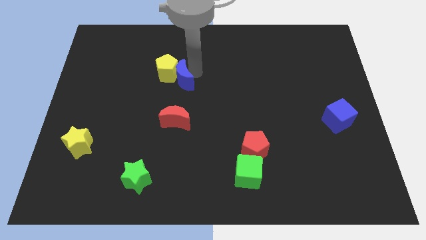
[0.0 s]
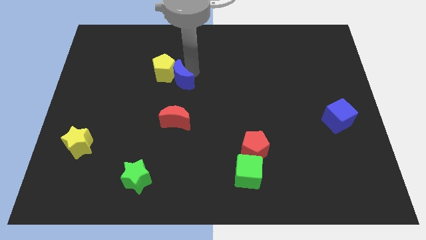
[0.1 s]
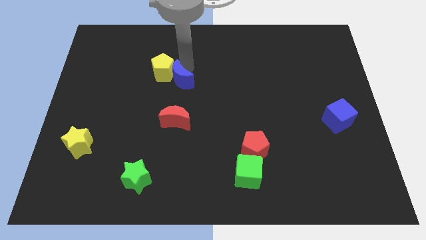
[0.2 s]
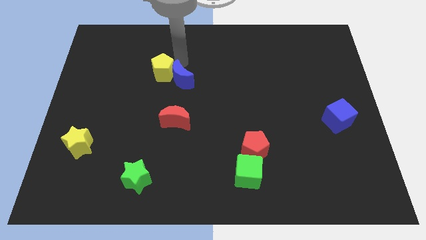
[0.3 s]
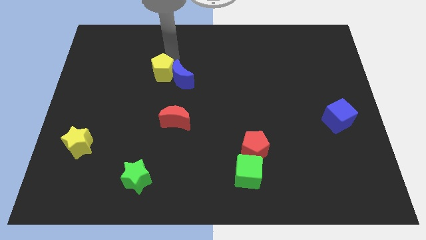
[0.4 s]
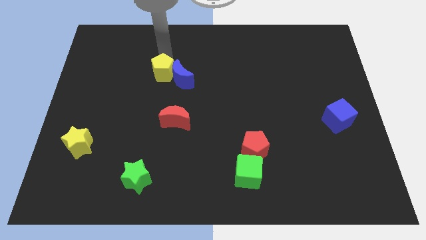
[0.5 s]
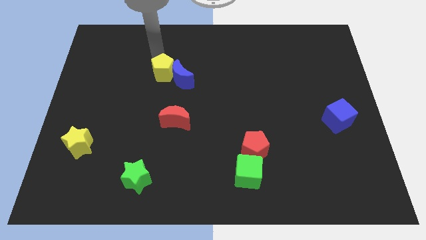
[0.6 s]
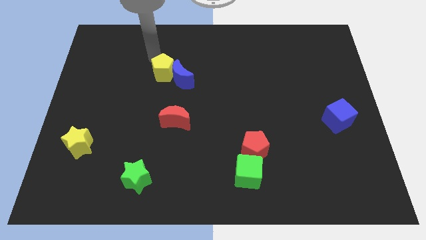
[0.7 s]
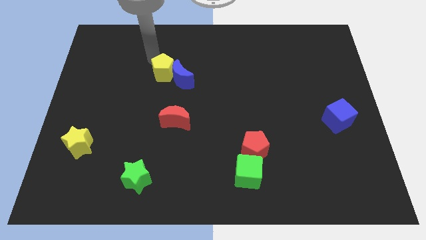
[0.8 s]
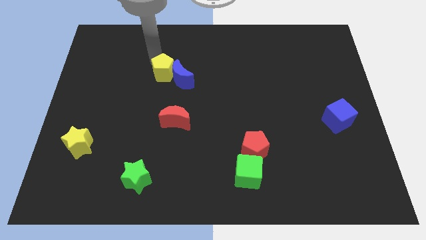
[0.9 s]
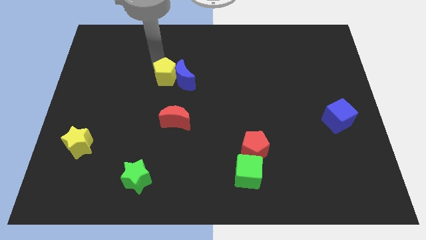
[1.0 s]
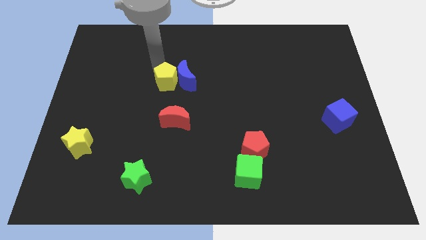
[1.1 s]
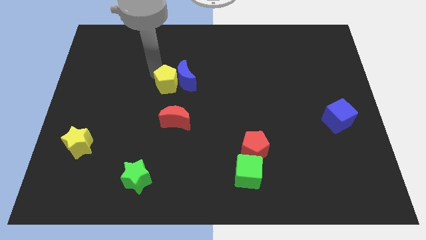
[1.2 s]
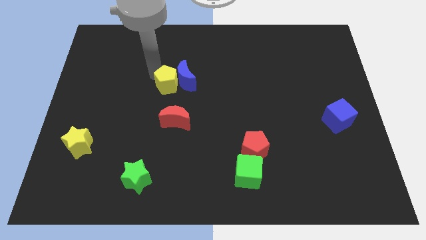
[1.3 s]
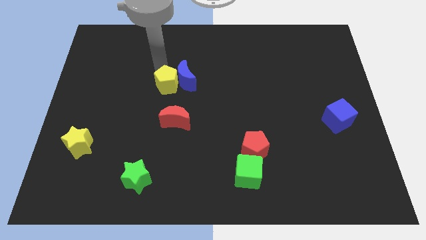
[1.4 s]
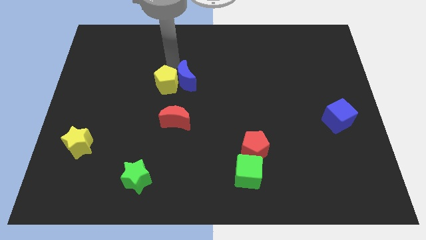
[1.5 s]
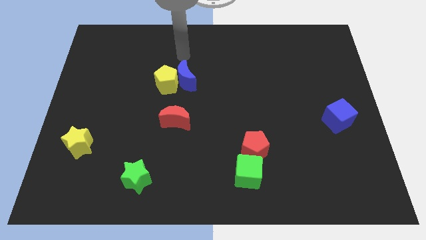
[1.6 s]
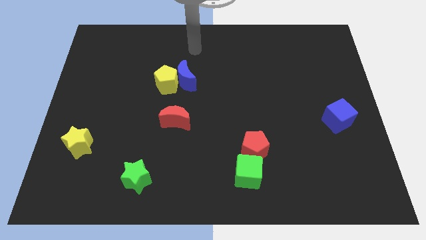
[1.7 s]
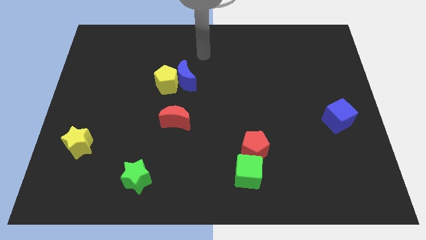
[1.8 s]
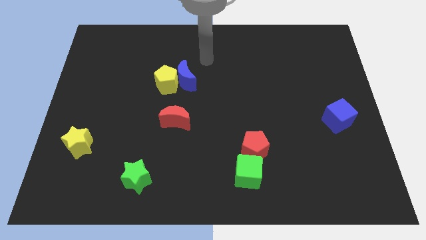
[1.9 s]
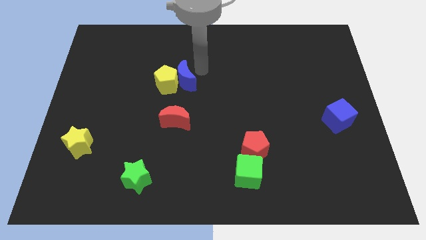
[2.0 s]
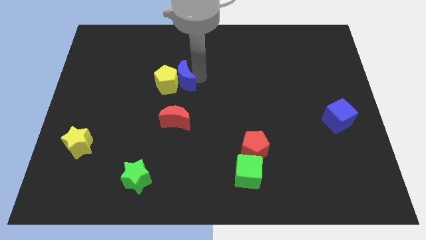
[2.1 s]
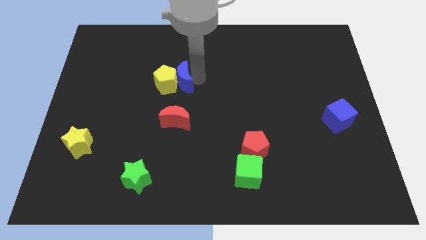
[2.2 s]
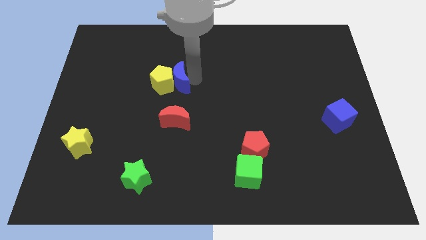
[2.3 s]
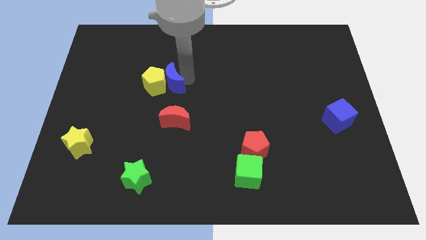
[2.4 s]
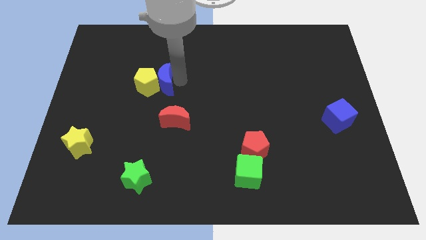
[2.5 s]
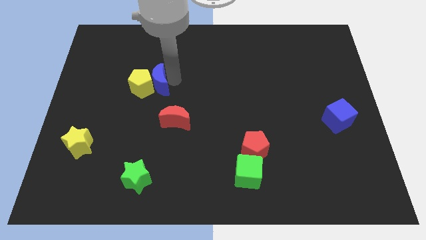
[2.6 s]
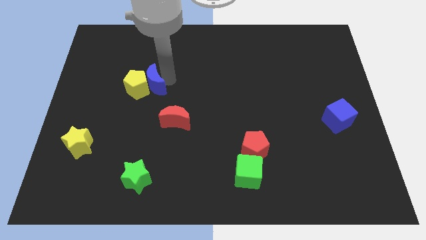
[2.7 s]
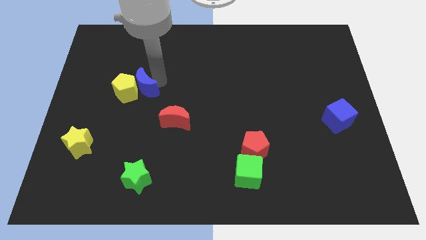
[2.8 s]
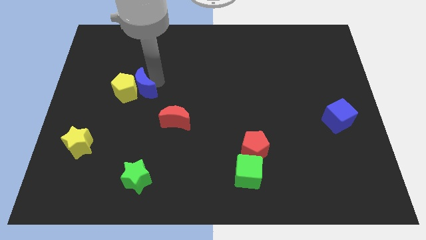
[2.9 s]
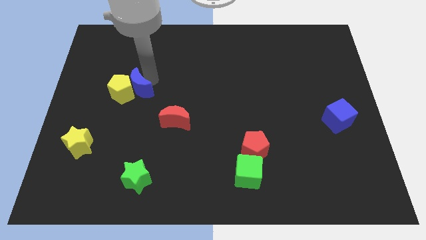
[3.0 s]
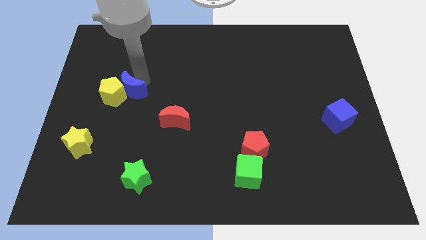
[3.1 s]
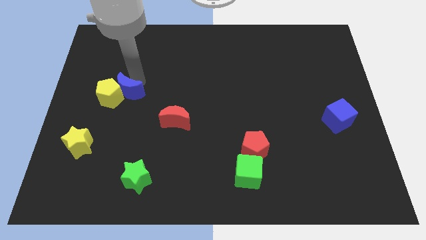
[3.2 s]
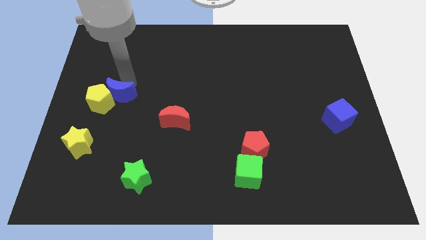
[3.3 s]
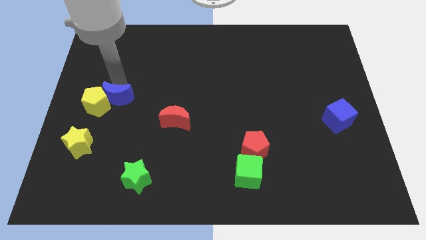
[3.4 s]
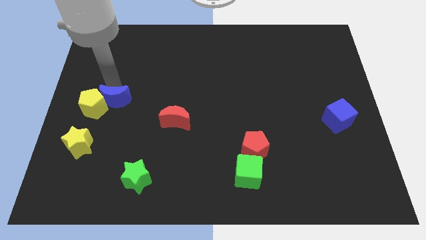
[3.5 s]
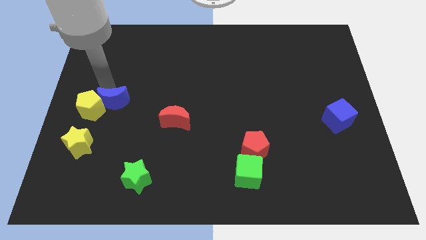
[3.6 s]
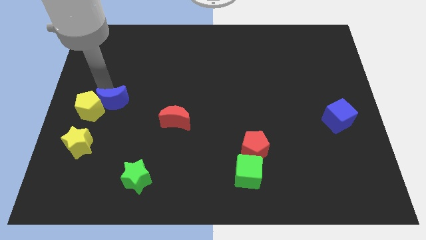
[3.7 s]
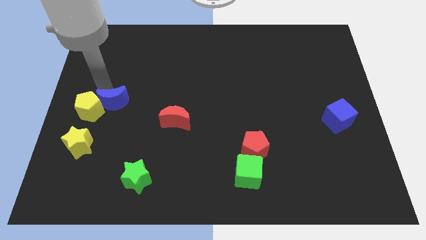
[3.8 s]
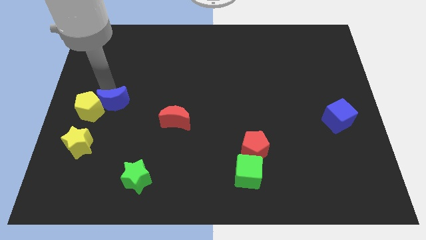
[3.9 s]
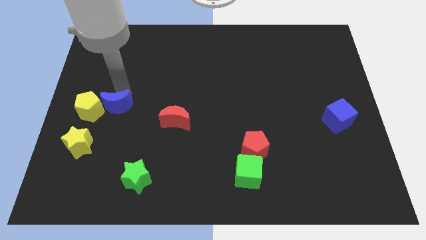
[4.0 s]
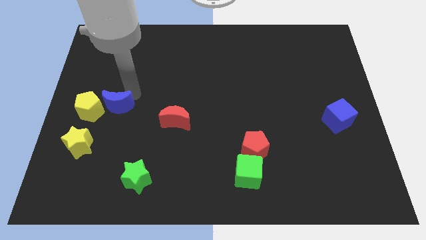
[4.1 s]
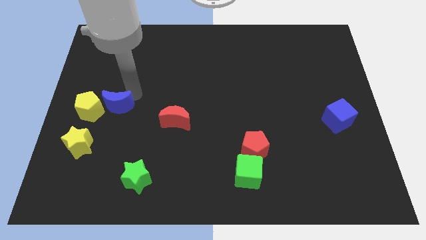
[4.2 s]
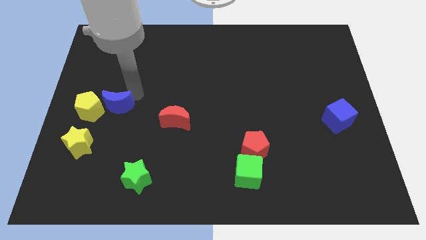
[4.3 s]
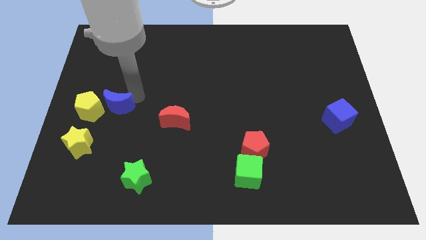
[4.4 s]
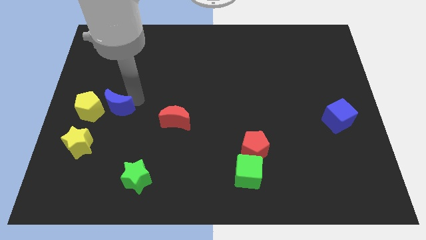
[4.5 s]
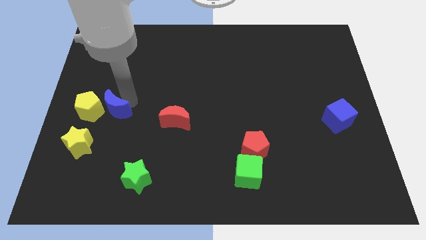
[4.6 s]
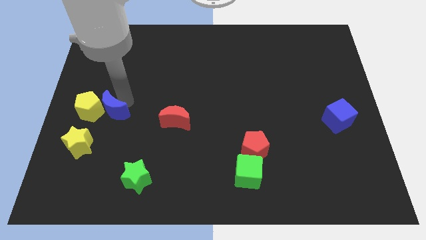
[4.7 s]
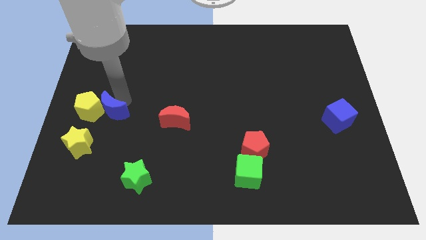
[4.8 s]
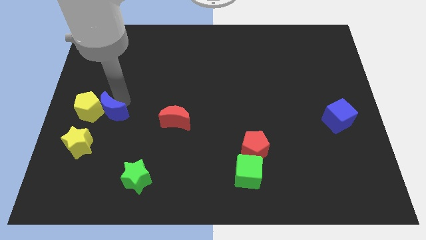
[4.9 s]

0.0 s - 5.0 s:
push yellow pentagon and blue crescent to the top of yellow star

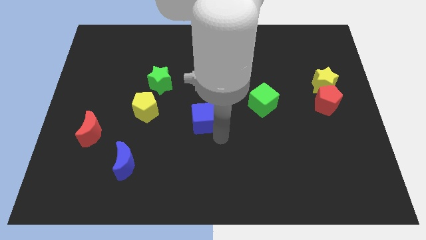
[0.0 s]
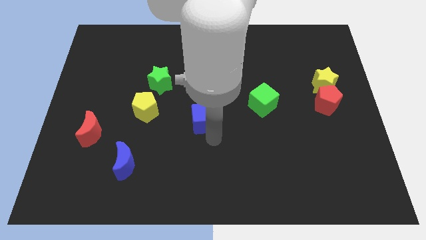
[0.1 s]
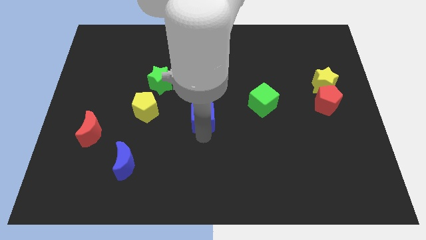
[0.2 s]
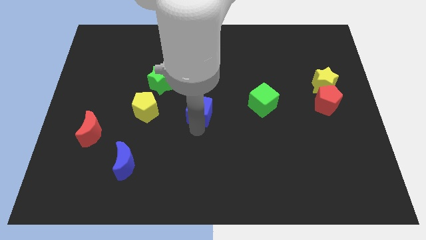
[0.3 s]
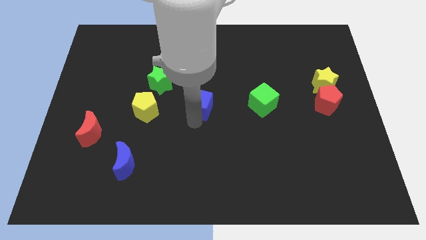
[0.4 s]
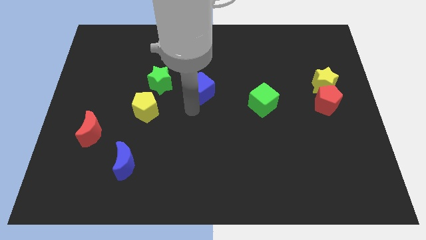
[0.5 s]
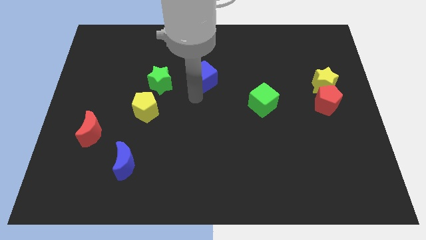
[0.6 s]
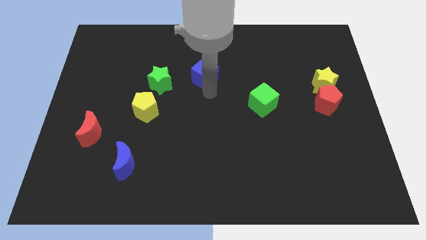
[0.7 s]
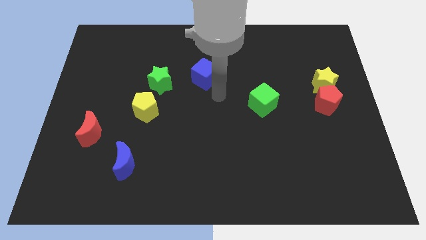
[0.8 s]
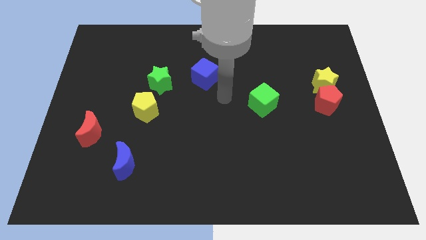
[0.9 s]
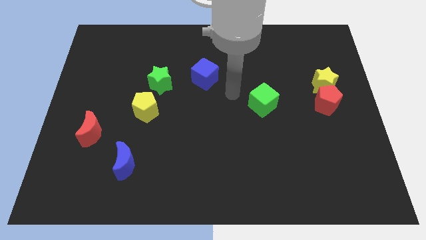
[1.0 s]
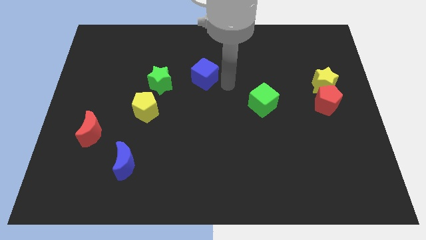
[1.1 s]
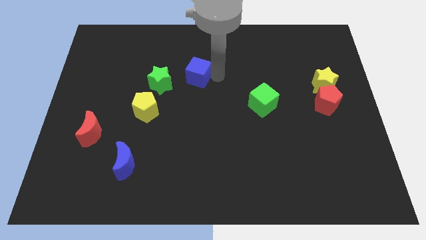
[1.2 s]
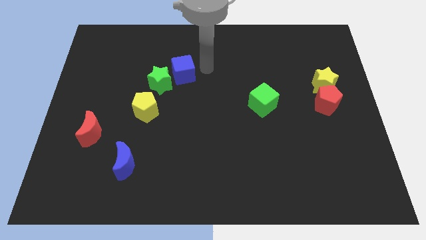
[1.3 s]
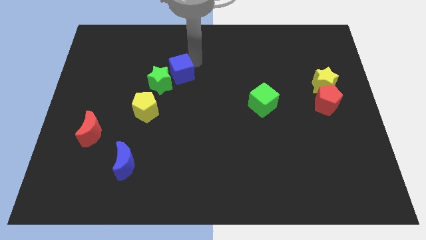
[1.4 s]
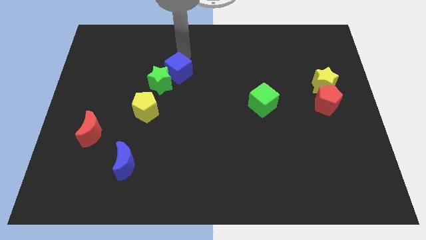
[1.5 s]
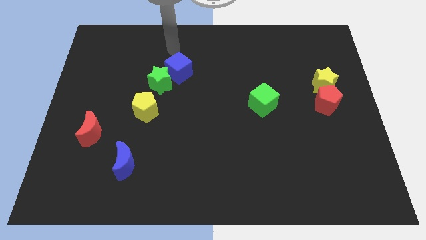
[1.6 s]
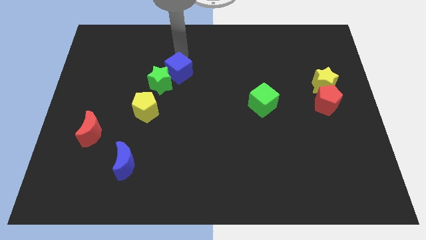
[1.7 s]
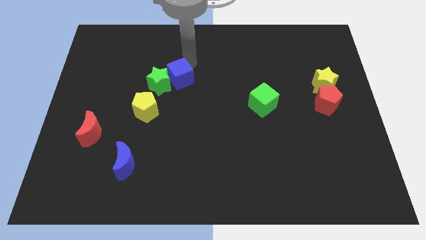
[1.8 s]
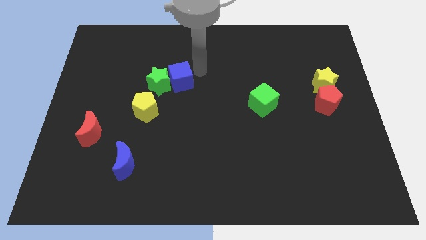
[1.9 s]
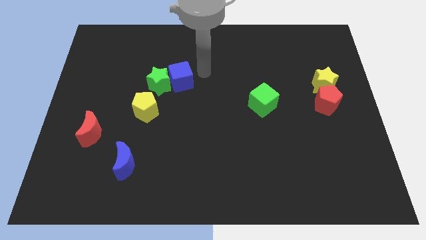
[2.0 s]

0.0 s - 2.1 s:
push the blue cube into the green star

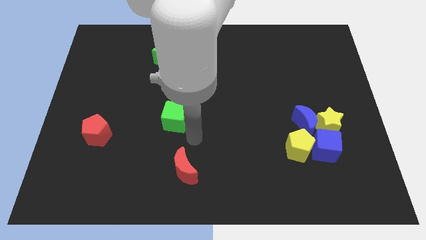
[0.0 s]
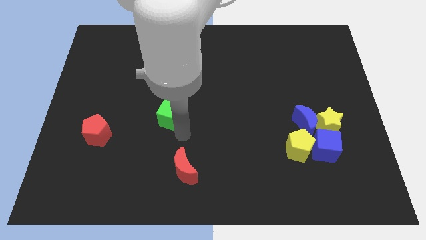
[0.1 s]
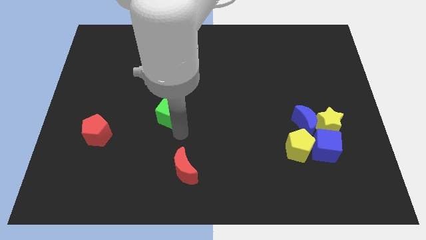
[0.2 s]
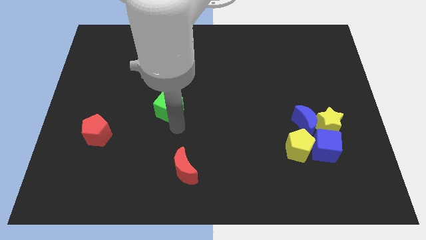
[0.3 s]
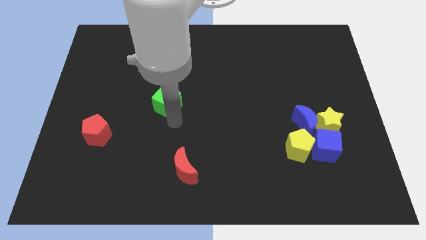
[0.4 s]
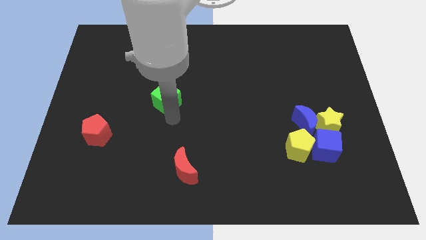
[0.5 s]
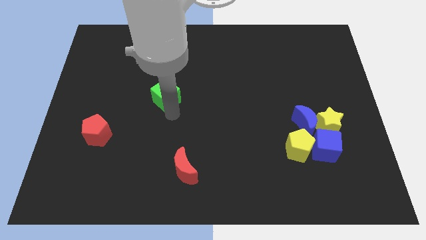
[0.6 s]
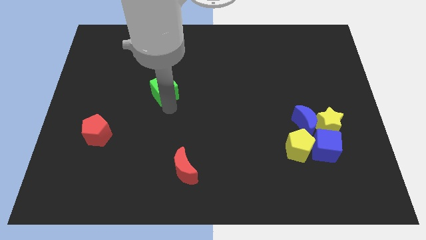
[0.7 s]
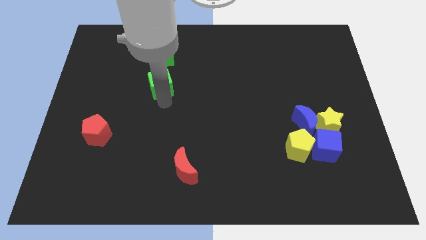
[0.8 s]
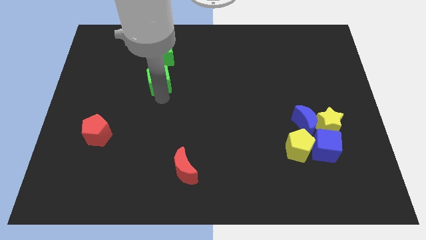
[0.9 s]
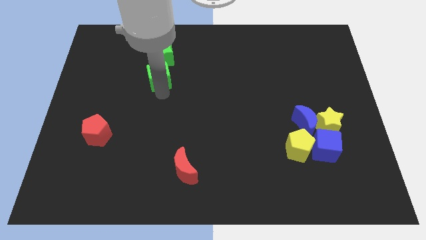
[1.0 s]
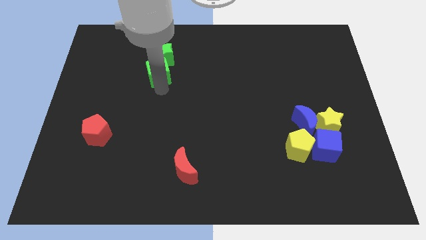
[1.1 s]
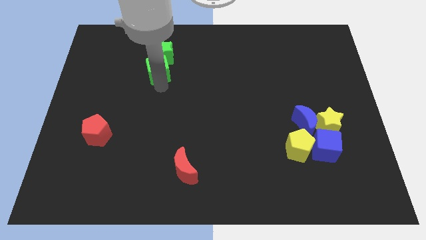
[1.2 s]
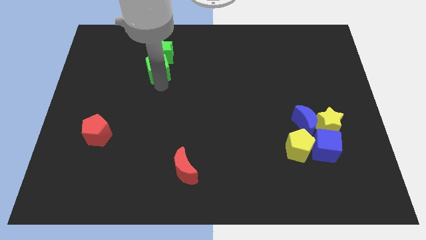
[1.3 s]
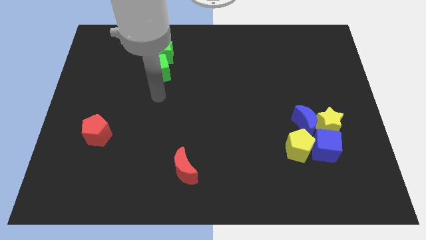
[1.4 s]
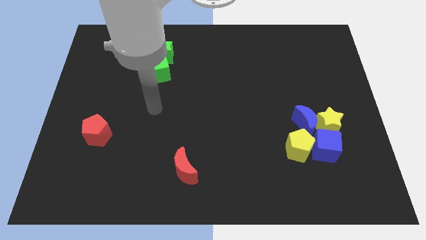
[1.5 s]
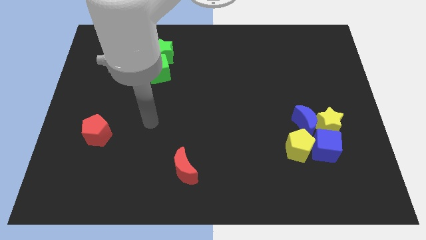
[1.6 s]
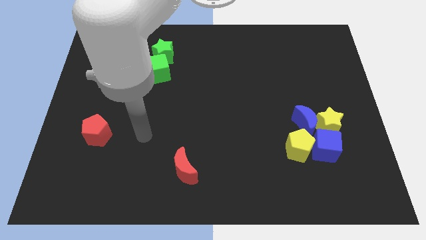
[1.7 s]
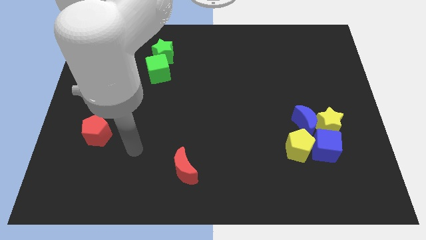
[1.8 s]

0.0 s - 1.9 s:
put the green cube into the green star
